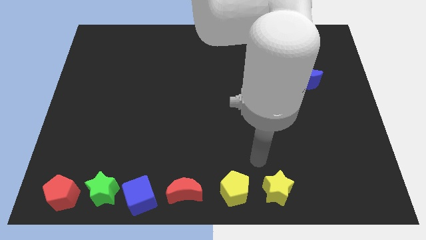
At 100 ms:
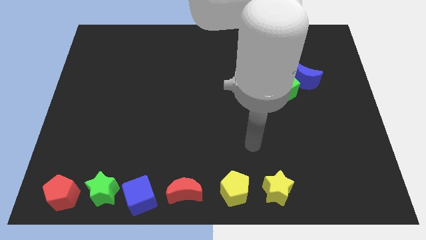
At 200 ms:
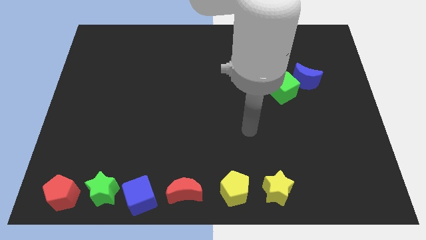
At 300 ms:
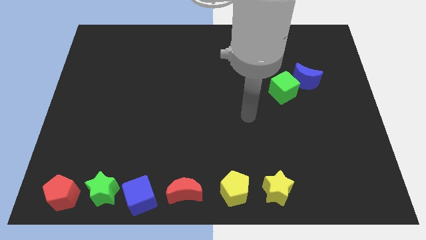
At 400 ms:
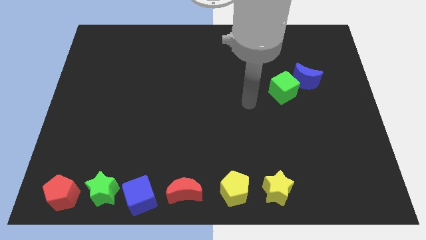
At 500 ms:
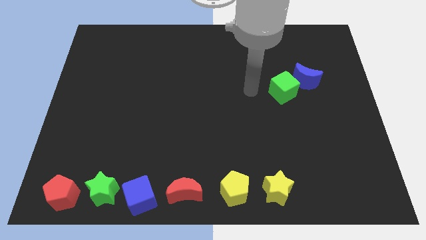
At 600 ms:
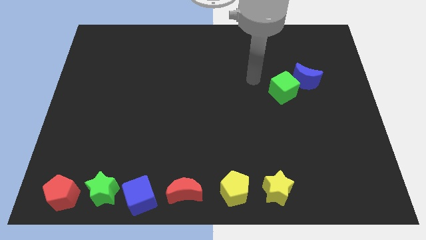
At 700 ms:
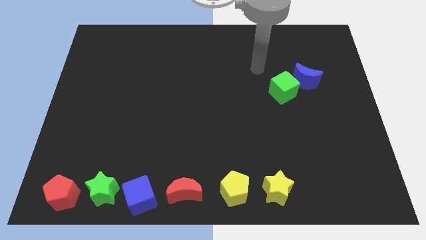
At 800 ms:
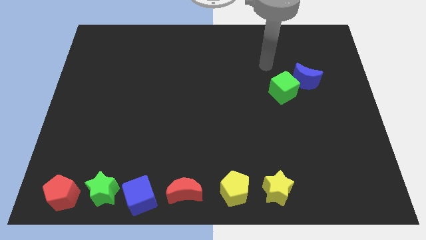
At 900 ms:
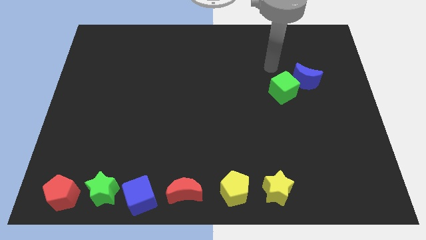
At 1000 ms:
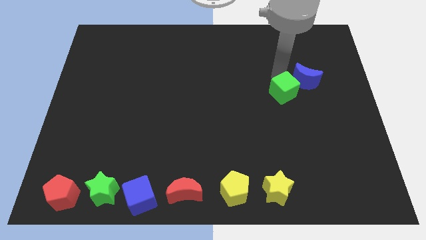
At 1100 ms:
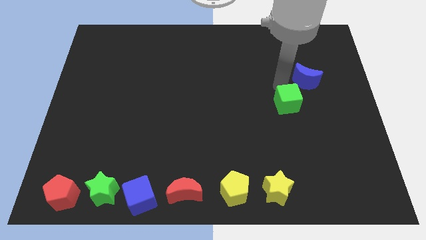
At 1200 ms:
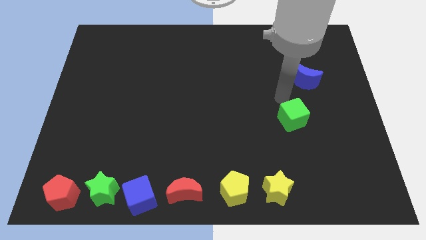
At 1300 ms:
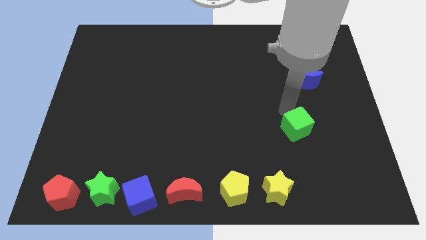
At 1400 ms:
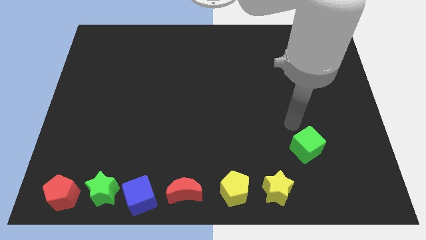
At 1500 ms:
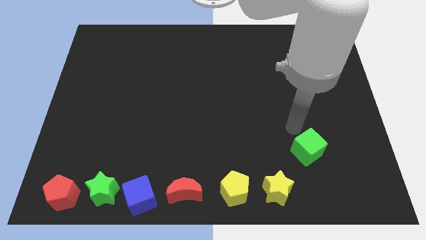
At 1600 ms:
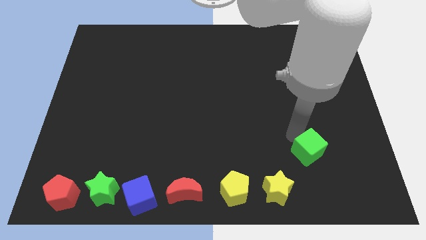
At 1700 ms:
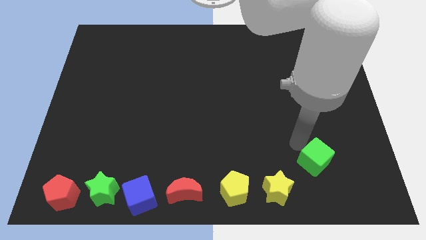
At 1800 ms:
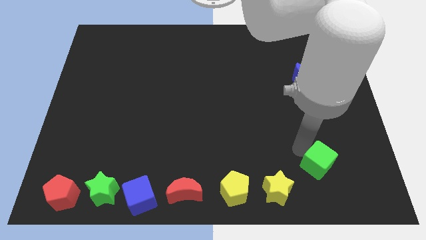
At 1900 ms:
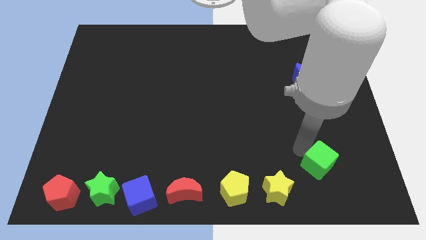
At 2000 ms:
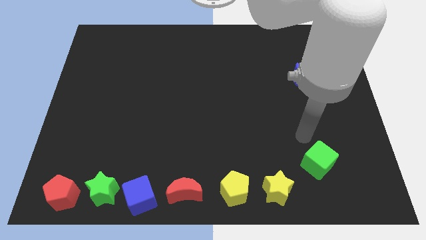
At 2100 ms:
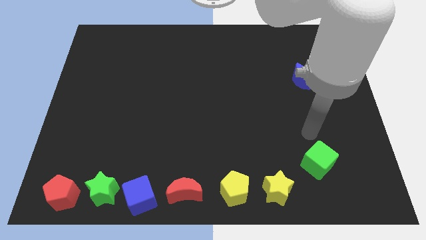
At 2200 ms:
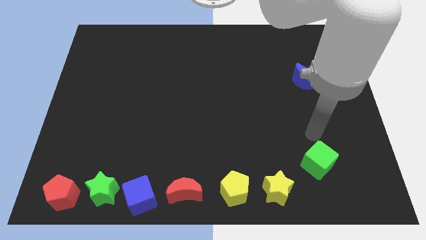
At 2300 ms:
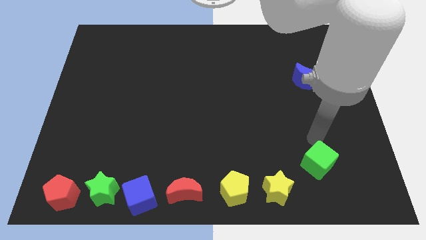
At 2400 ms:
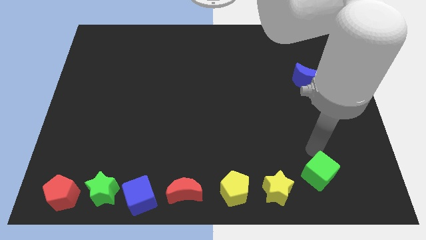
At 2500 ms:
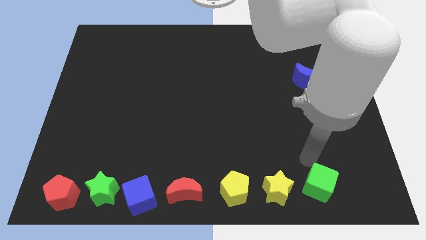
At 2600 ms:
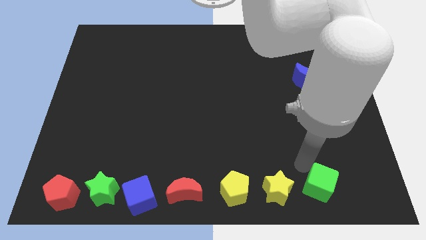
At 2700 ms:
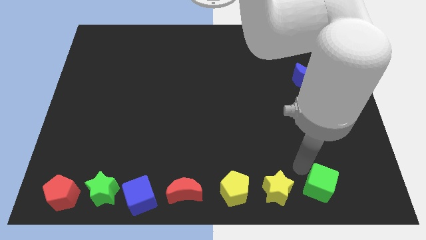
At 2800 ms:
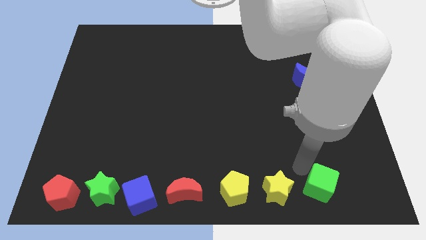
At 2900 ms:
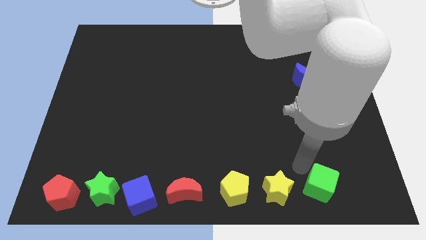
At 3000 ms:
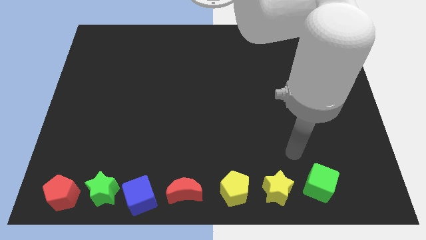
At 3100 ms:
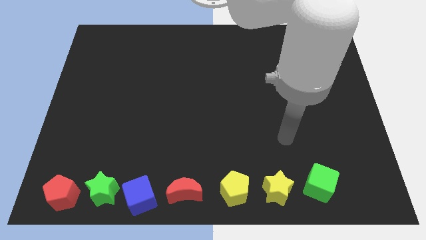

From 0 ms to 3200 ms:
move the green cube to the right side of yellow star

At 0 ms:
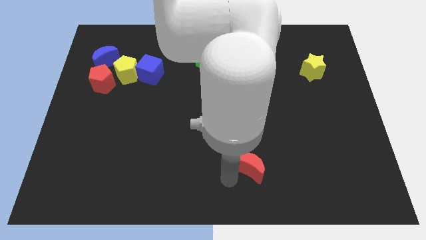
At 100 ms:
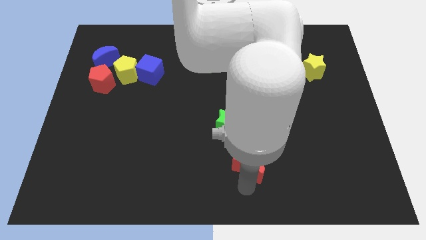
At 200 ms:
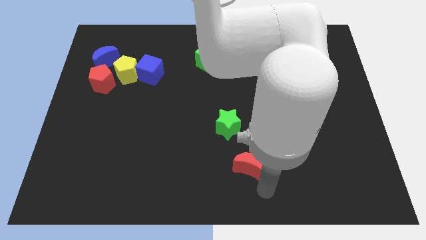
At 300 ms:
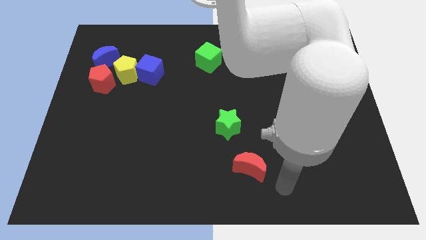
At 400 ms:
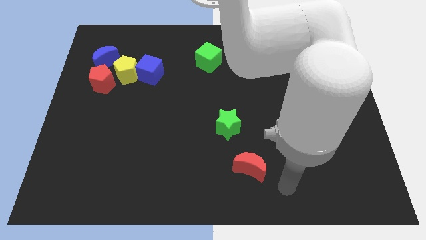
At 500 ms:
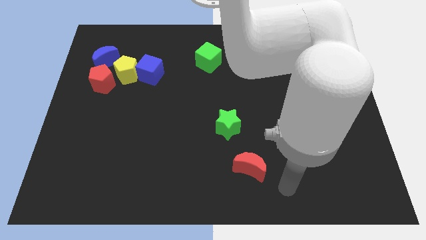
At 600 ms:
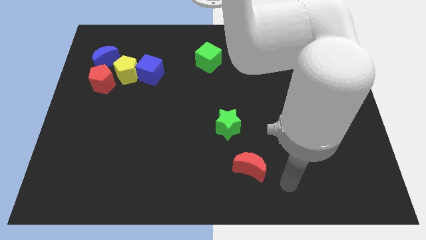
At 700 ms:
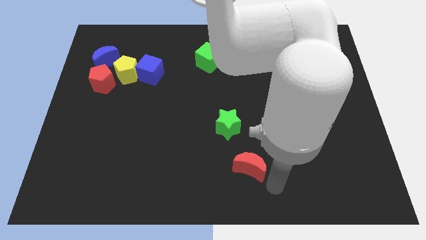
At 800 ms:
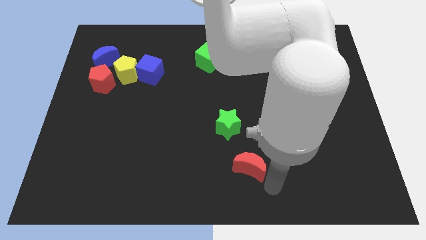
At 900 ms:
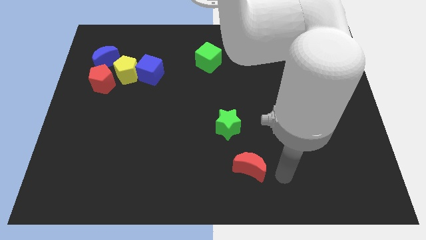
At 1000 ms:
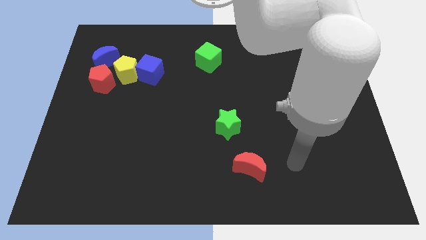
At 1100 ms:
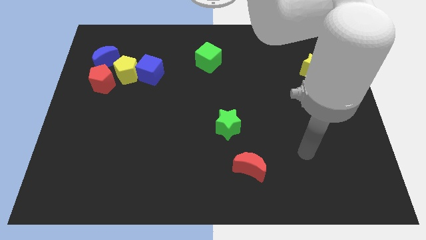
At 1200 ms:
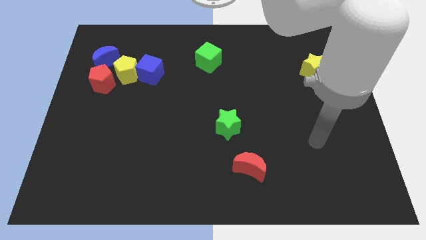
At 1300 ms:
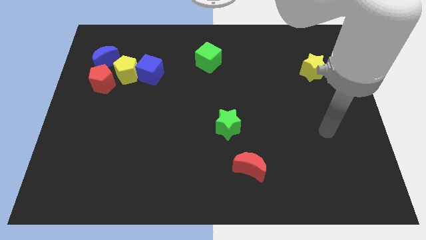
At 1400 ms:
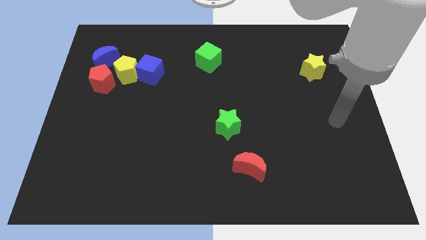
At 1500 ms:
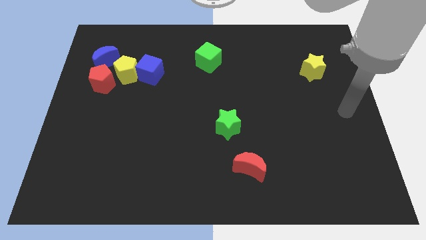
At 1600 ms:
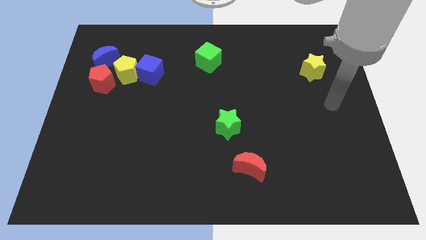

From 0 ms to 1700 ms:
move your arm to the right center of the board

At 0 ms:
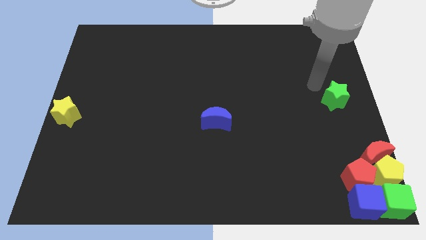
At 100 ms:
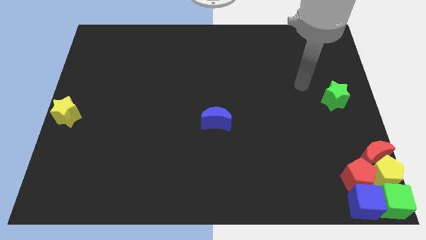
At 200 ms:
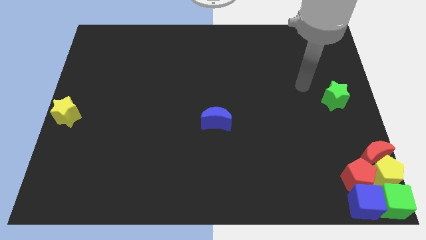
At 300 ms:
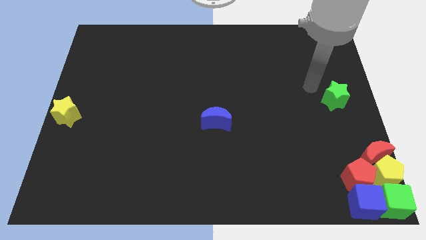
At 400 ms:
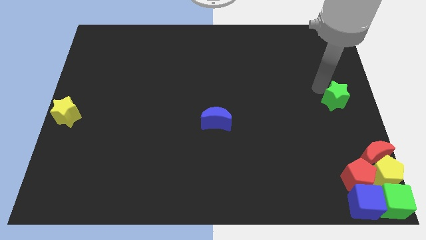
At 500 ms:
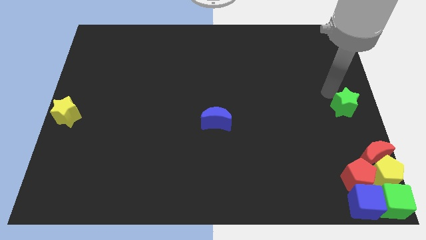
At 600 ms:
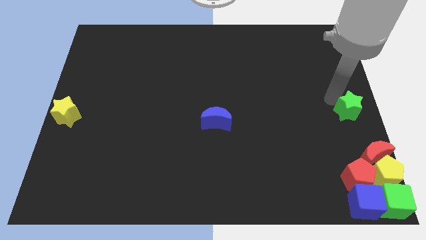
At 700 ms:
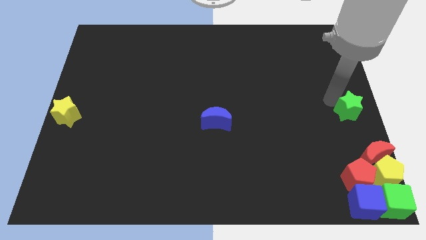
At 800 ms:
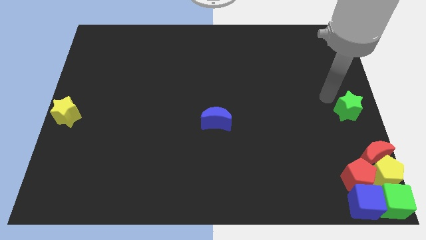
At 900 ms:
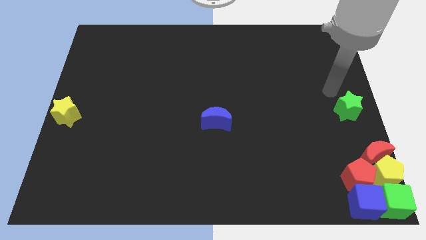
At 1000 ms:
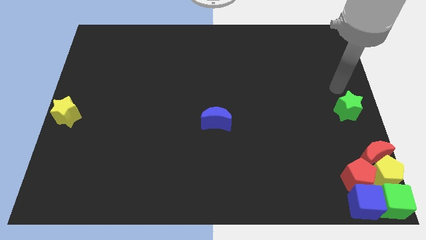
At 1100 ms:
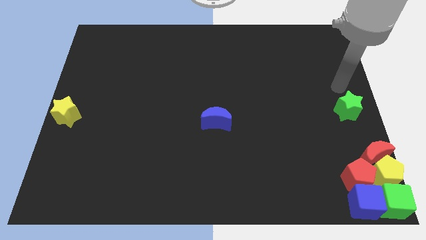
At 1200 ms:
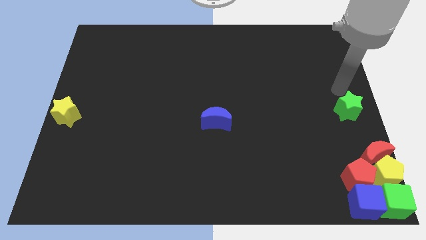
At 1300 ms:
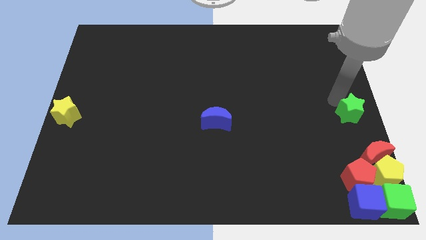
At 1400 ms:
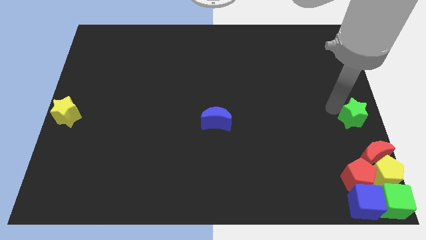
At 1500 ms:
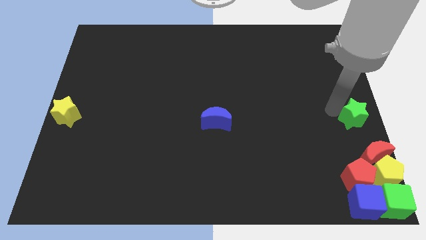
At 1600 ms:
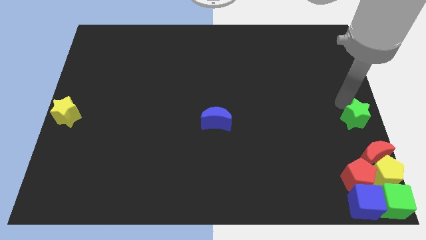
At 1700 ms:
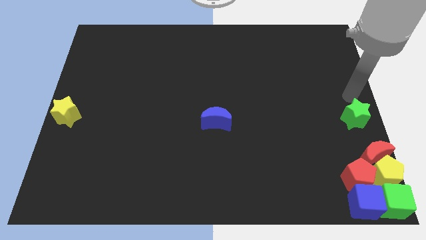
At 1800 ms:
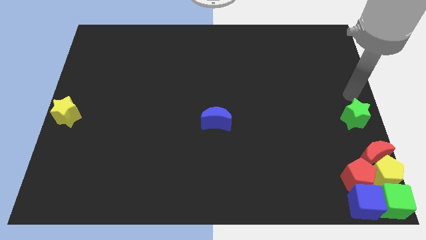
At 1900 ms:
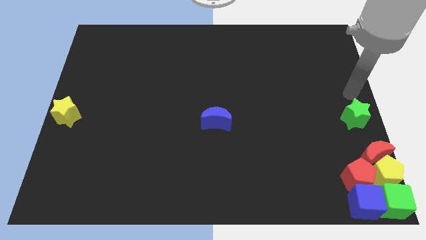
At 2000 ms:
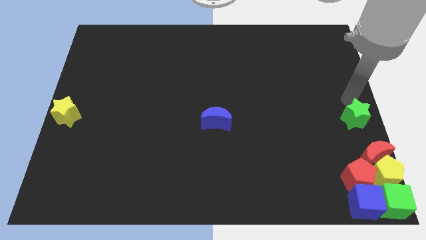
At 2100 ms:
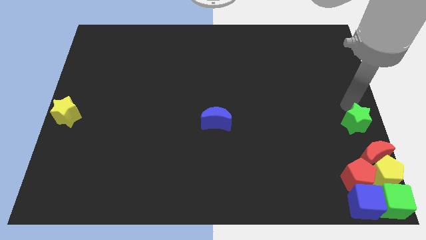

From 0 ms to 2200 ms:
place the green star parallel to the blue crescent

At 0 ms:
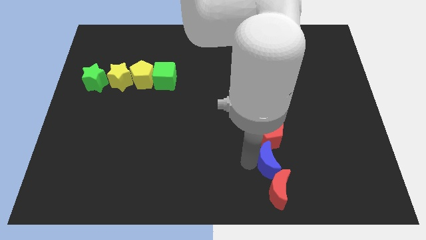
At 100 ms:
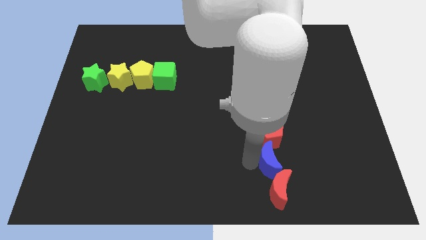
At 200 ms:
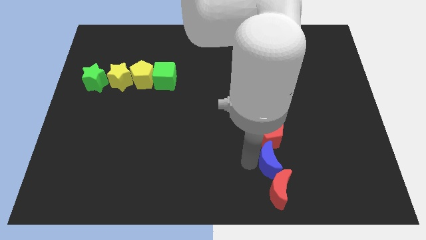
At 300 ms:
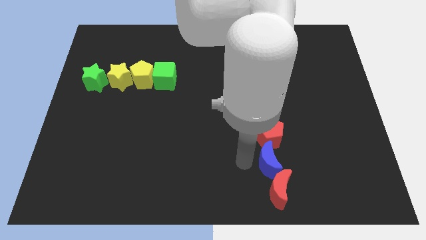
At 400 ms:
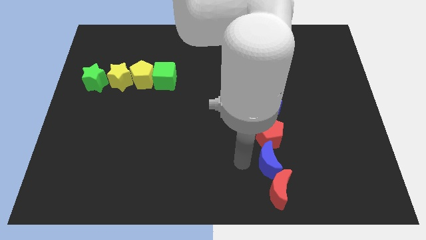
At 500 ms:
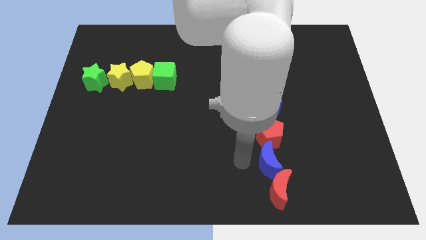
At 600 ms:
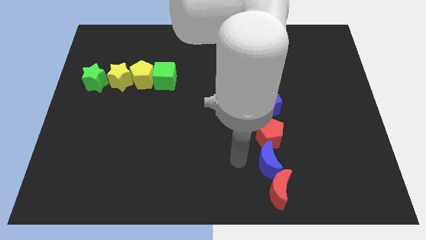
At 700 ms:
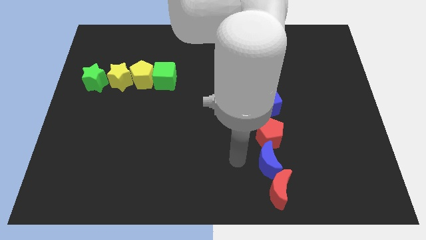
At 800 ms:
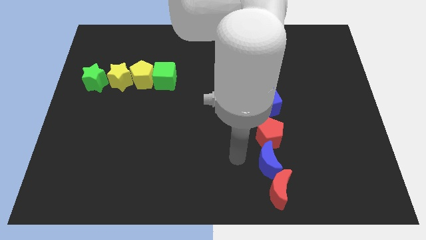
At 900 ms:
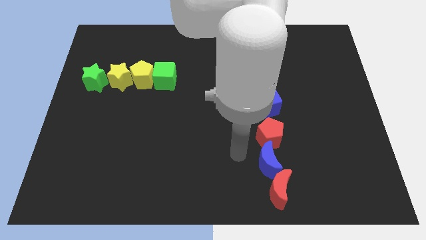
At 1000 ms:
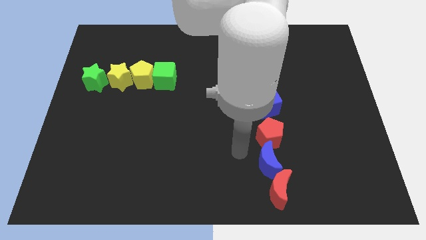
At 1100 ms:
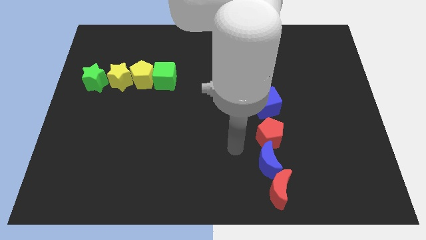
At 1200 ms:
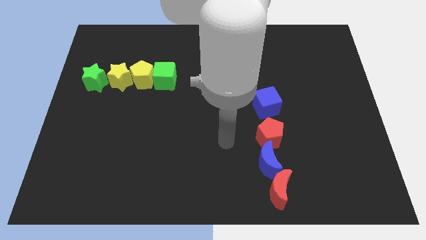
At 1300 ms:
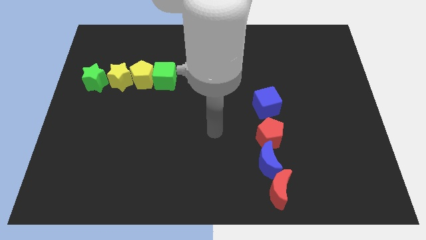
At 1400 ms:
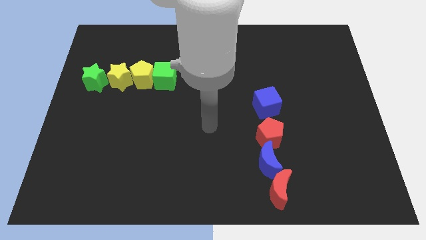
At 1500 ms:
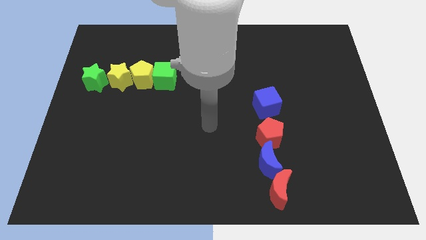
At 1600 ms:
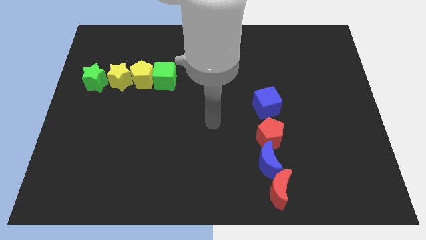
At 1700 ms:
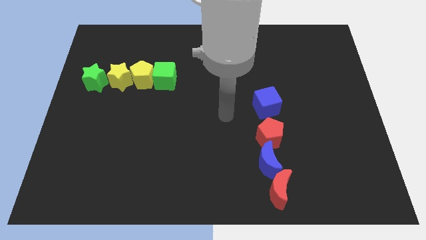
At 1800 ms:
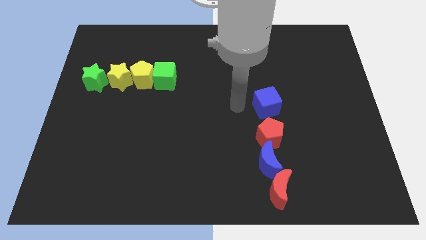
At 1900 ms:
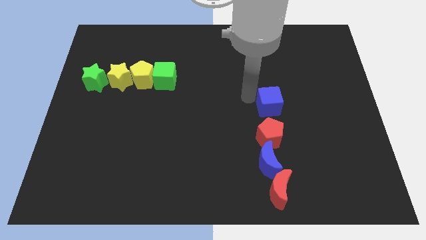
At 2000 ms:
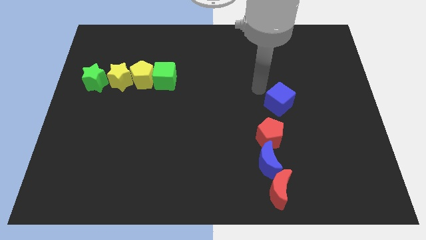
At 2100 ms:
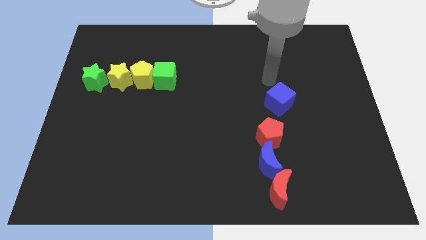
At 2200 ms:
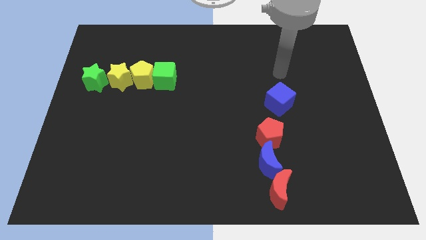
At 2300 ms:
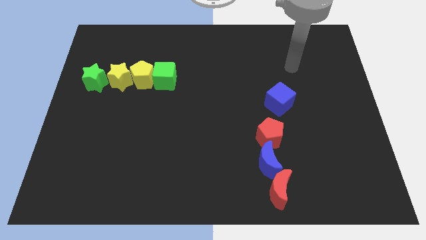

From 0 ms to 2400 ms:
place your arm top to the blue cube
